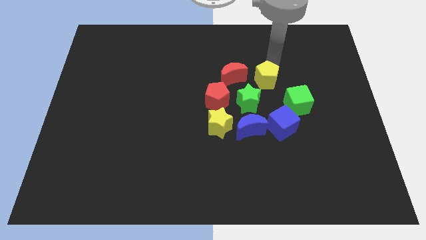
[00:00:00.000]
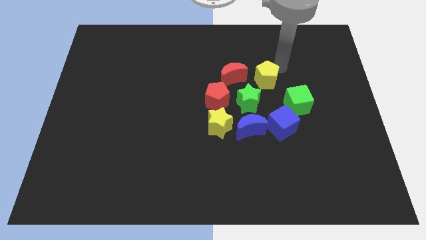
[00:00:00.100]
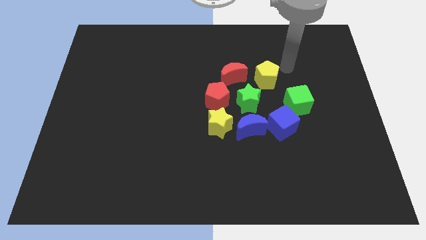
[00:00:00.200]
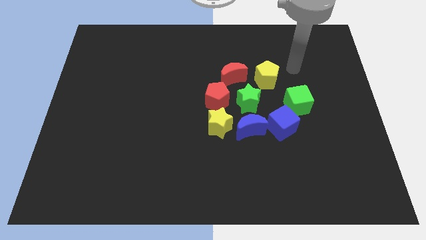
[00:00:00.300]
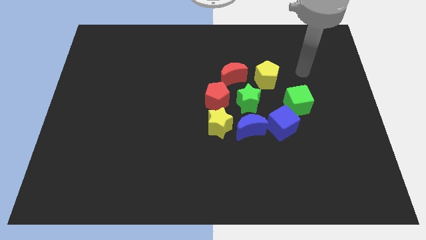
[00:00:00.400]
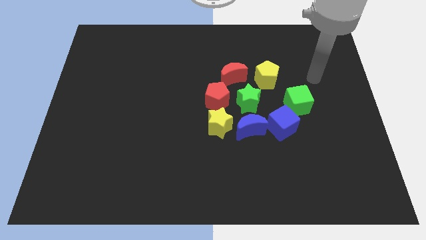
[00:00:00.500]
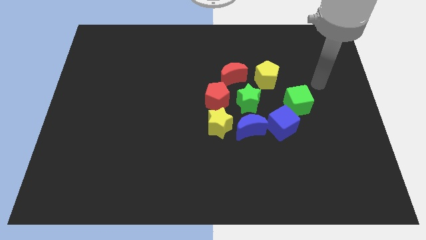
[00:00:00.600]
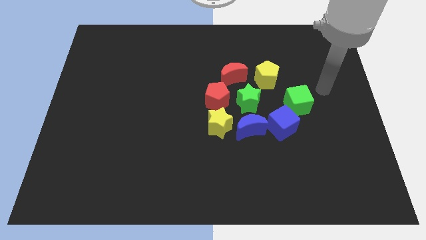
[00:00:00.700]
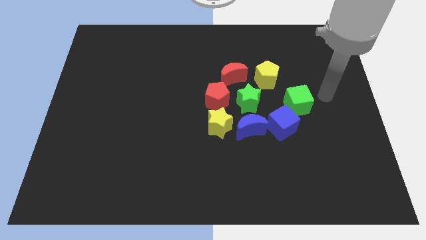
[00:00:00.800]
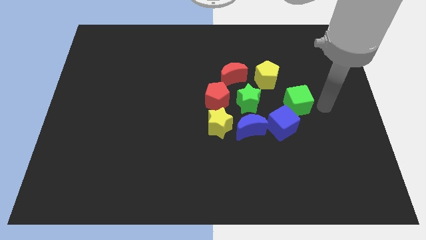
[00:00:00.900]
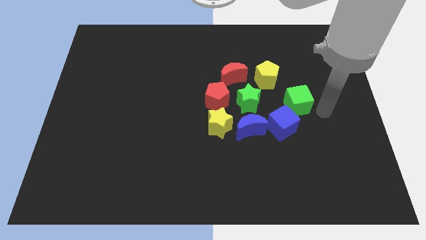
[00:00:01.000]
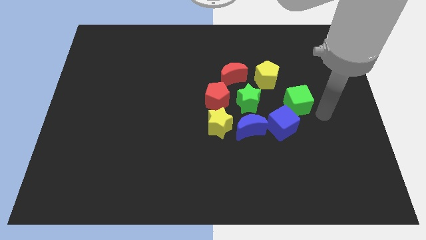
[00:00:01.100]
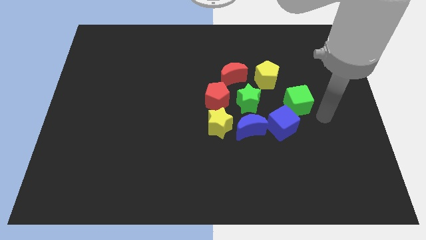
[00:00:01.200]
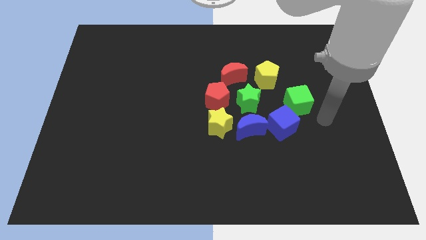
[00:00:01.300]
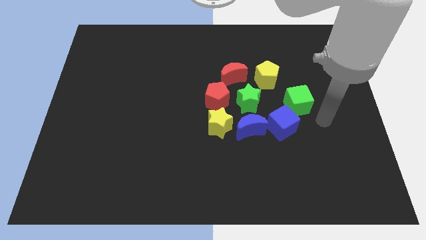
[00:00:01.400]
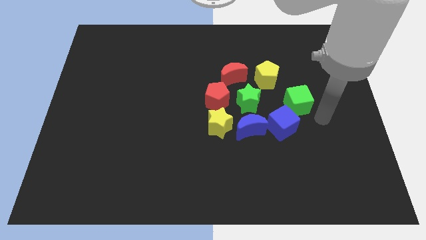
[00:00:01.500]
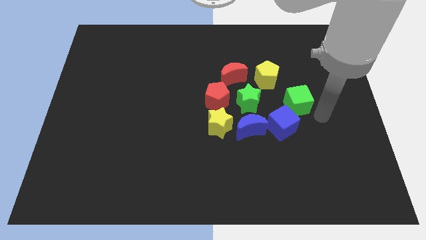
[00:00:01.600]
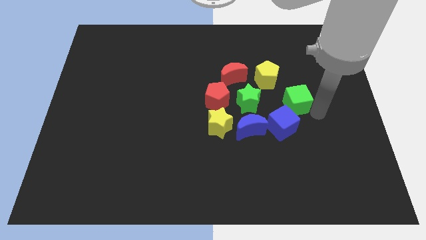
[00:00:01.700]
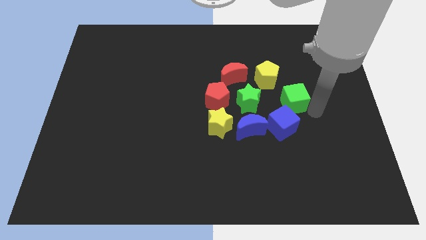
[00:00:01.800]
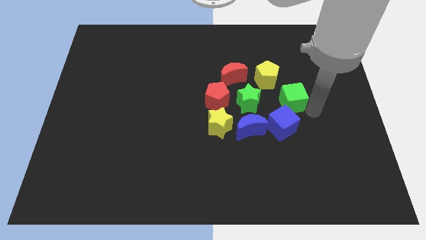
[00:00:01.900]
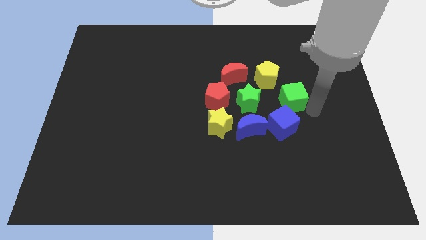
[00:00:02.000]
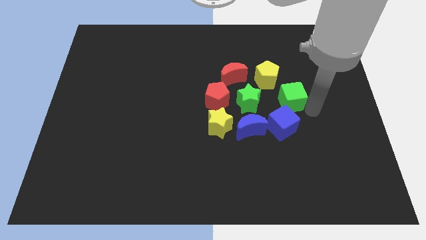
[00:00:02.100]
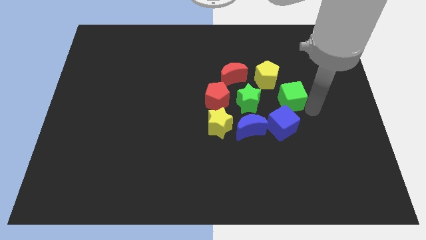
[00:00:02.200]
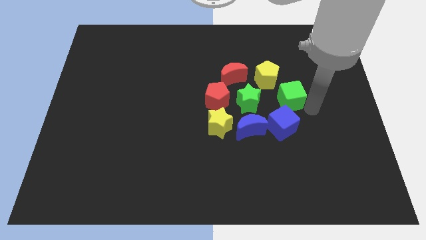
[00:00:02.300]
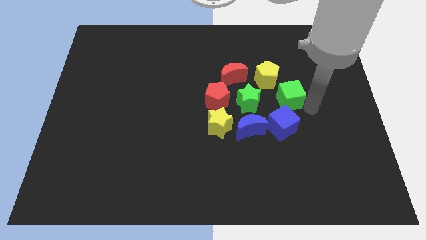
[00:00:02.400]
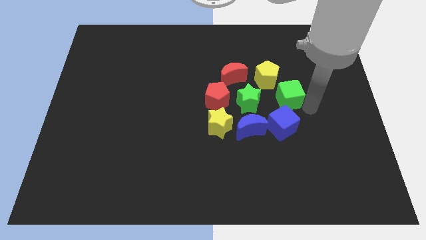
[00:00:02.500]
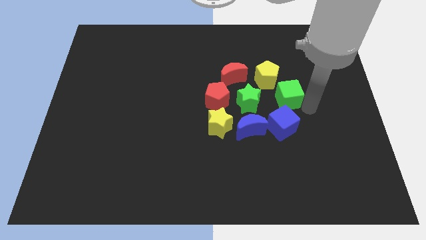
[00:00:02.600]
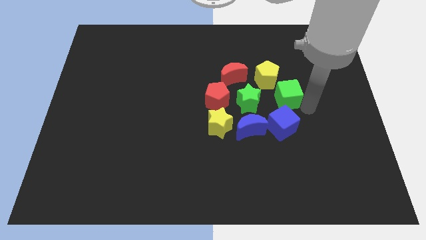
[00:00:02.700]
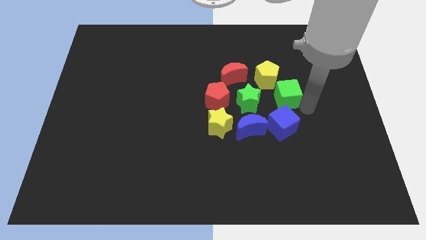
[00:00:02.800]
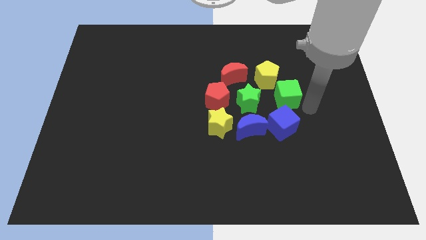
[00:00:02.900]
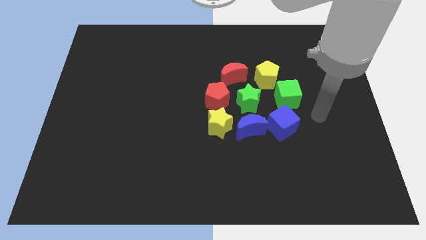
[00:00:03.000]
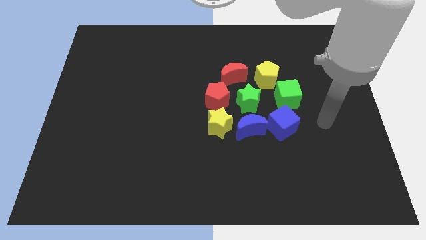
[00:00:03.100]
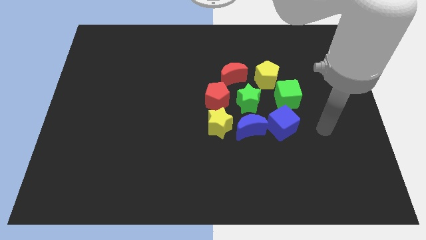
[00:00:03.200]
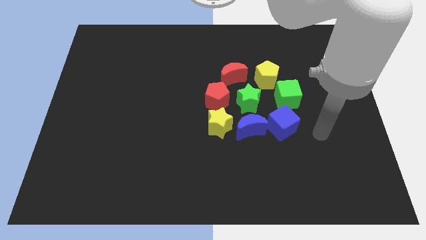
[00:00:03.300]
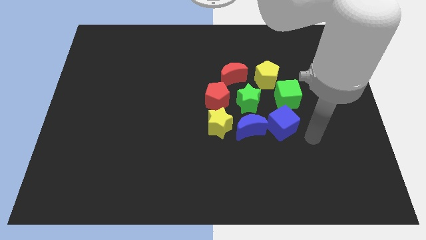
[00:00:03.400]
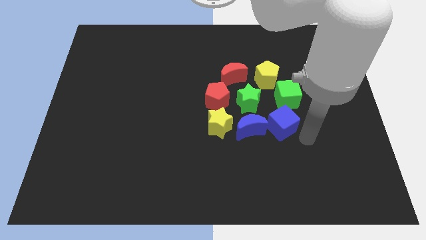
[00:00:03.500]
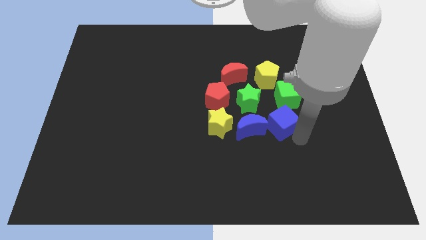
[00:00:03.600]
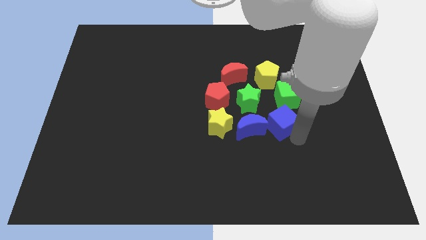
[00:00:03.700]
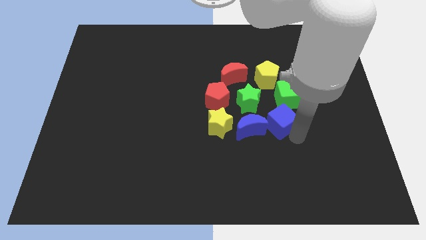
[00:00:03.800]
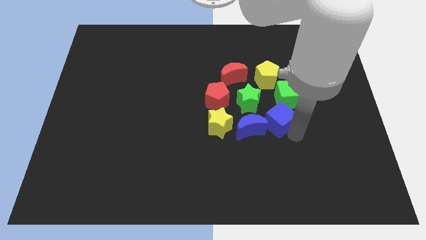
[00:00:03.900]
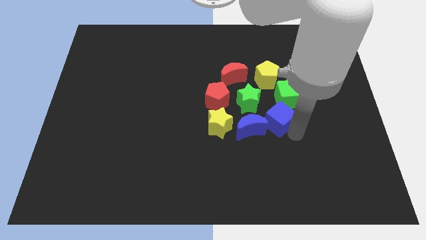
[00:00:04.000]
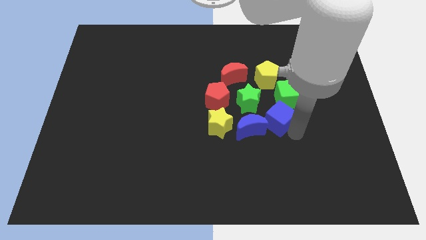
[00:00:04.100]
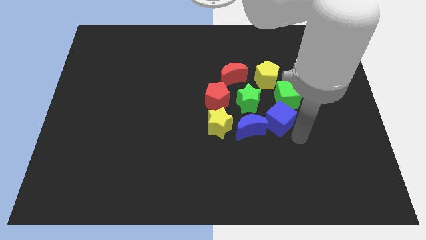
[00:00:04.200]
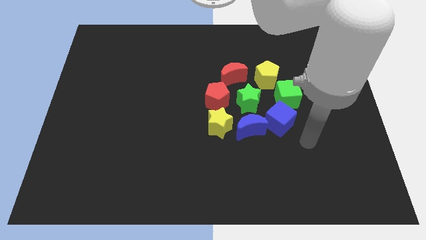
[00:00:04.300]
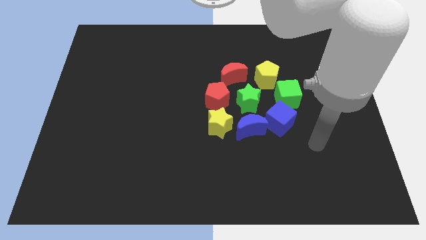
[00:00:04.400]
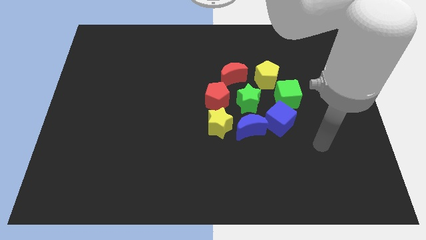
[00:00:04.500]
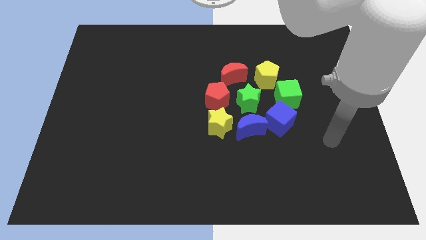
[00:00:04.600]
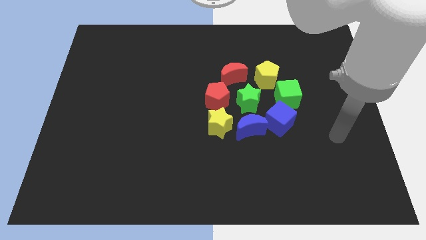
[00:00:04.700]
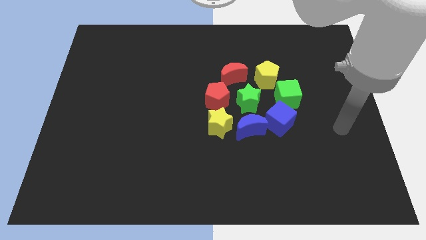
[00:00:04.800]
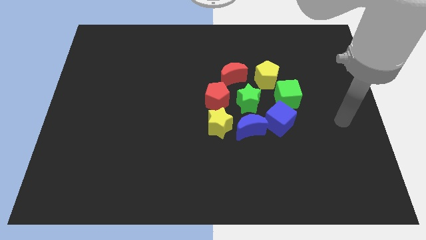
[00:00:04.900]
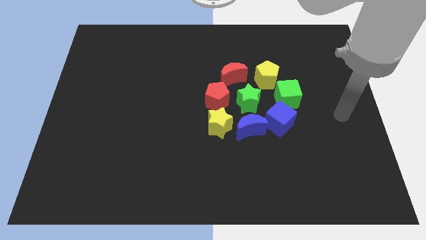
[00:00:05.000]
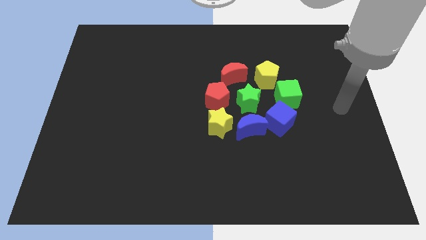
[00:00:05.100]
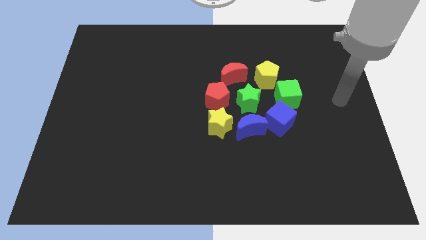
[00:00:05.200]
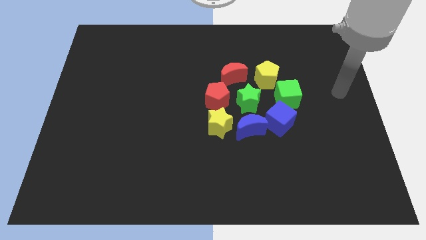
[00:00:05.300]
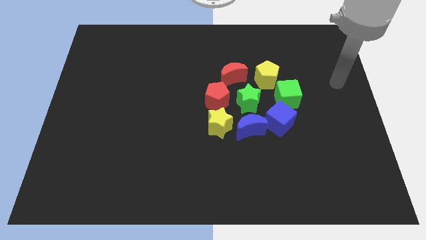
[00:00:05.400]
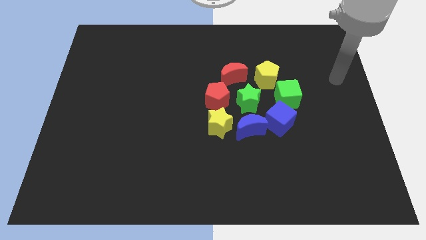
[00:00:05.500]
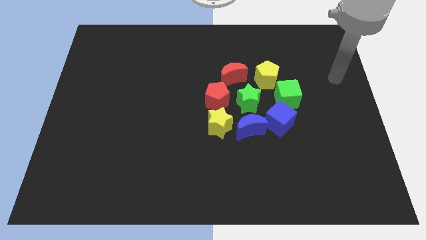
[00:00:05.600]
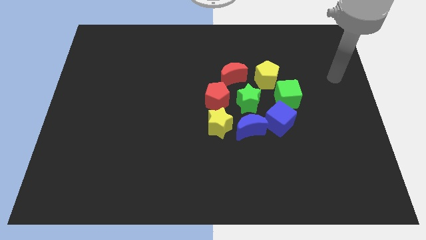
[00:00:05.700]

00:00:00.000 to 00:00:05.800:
adjust the green and blue blocks at the center of the board

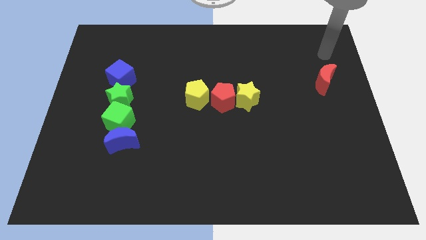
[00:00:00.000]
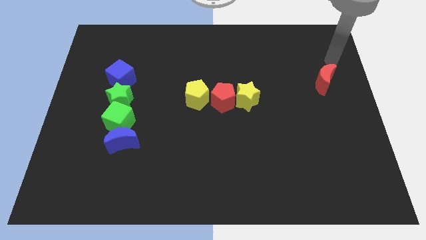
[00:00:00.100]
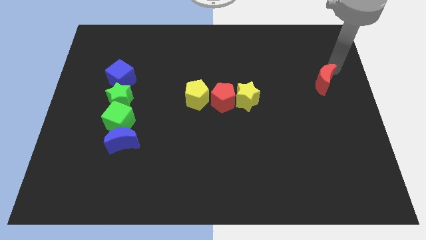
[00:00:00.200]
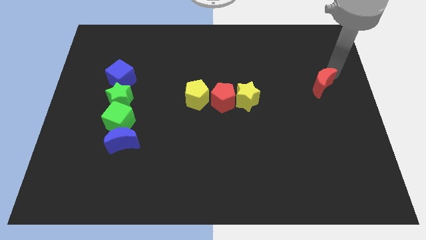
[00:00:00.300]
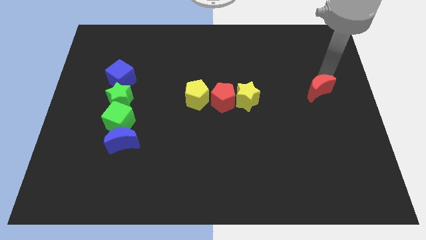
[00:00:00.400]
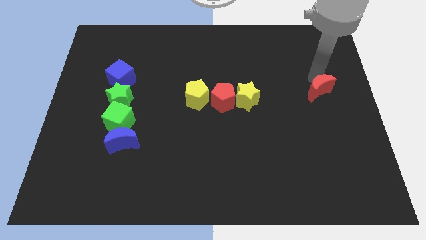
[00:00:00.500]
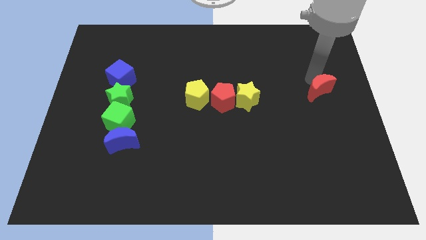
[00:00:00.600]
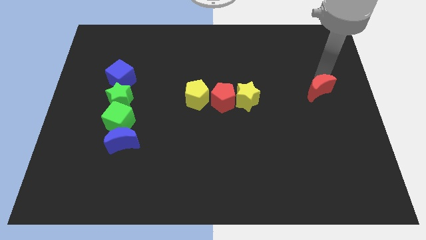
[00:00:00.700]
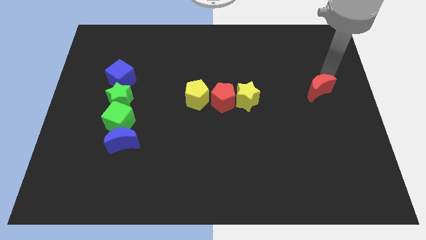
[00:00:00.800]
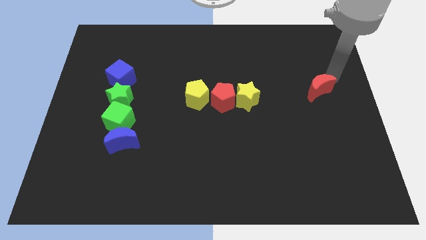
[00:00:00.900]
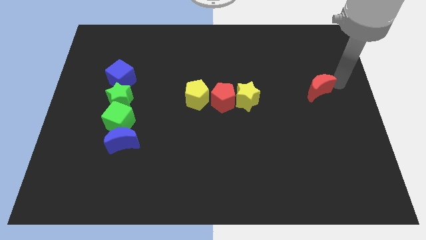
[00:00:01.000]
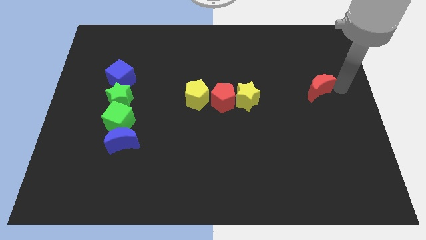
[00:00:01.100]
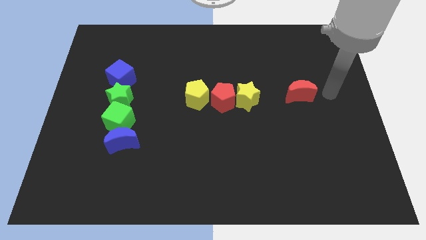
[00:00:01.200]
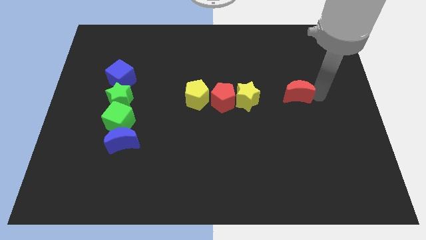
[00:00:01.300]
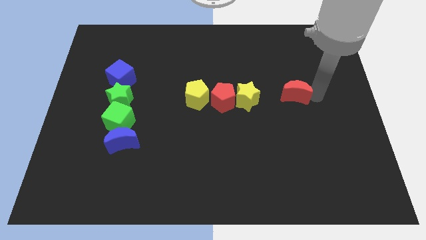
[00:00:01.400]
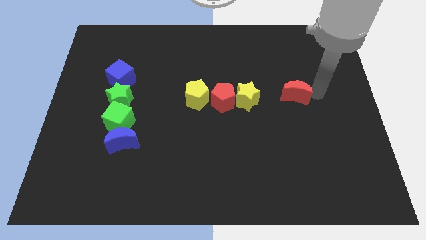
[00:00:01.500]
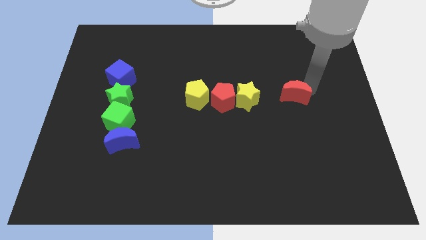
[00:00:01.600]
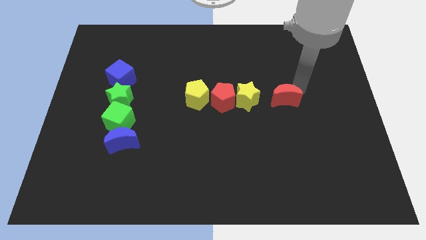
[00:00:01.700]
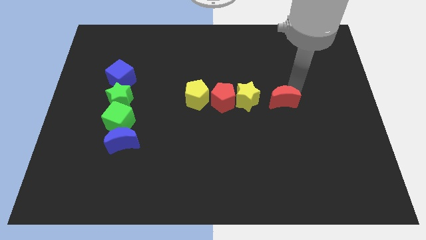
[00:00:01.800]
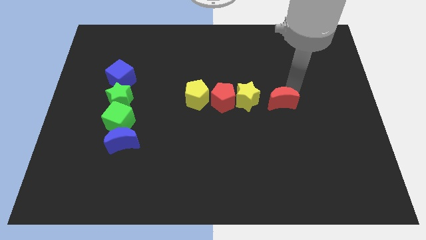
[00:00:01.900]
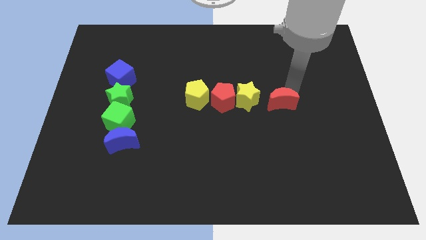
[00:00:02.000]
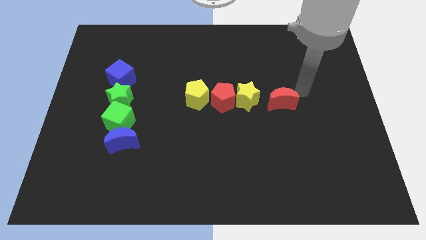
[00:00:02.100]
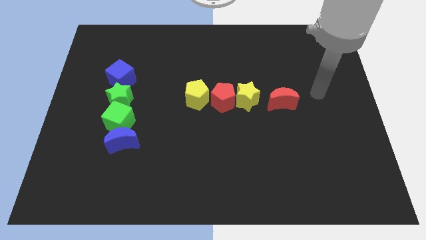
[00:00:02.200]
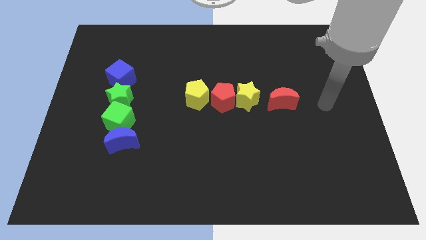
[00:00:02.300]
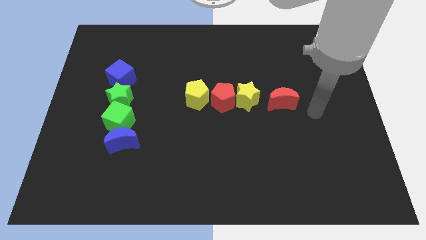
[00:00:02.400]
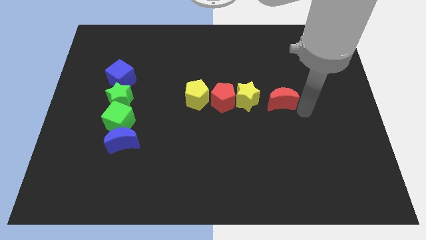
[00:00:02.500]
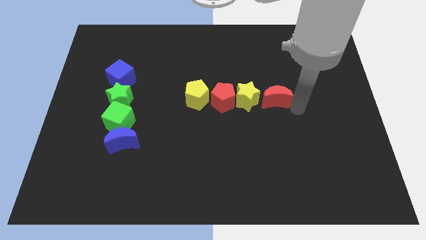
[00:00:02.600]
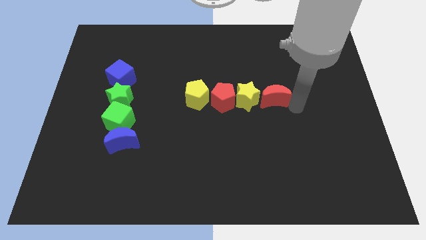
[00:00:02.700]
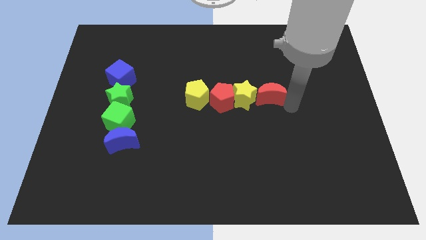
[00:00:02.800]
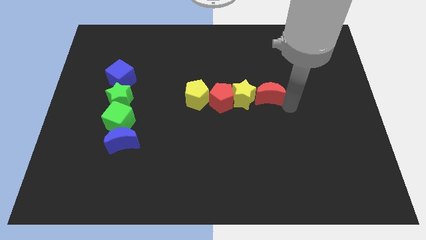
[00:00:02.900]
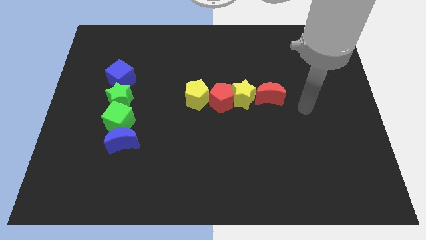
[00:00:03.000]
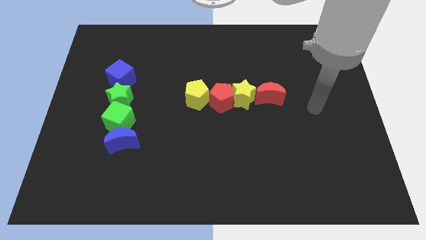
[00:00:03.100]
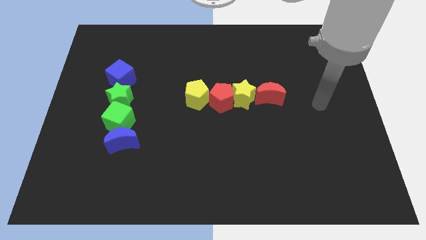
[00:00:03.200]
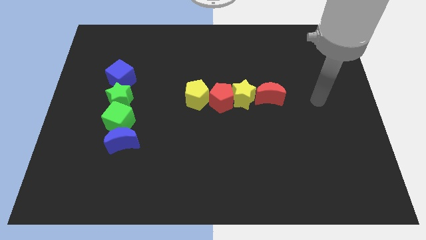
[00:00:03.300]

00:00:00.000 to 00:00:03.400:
push the red crescent to the right side of group of blocks to form horizontal line
